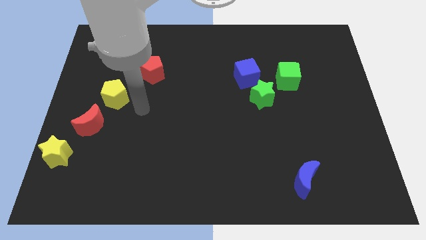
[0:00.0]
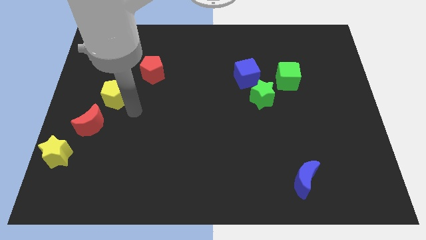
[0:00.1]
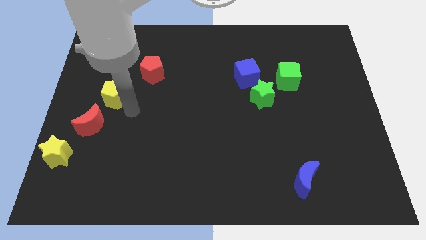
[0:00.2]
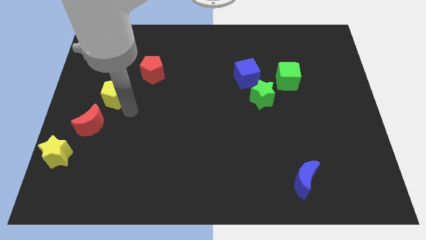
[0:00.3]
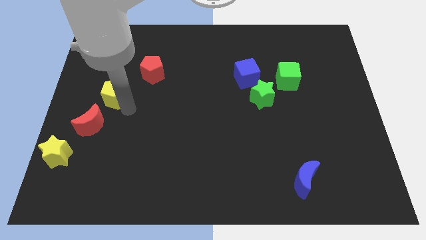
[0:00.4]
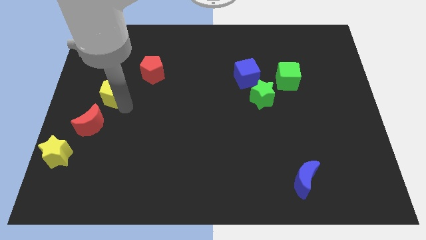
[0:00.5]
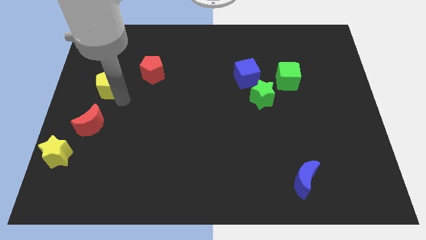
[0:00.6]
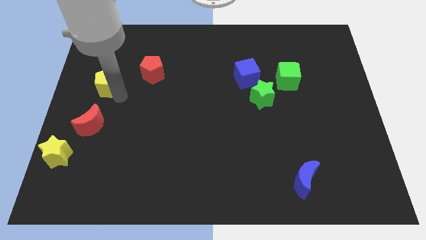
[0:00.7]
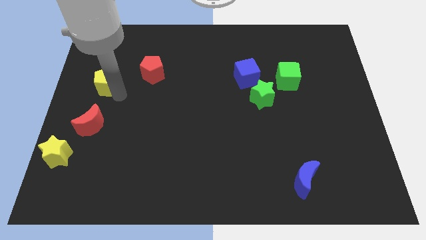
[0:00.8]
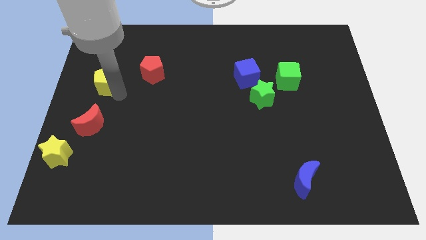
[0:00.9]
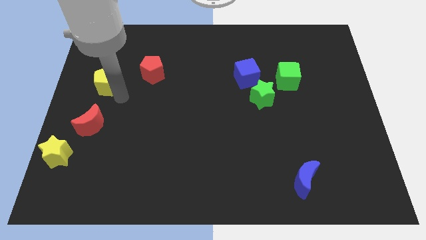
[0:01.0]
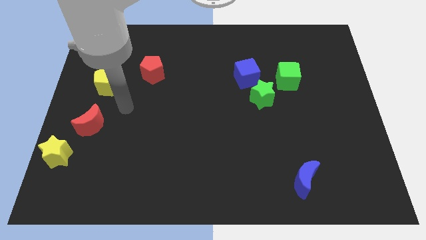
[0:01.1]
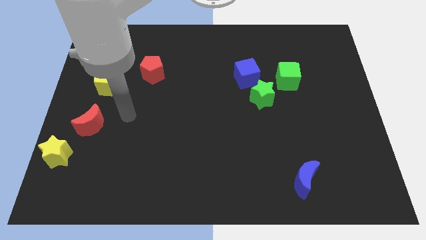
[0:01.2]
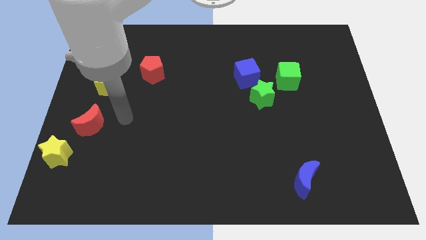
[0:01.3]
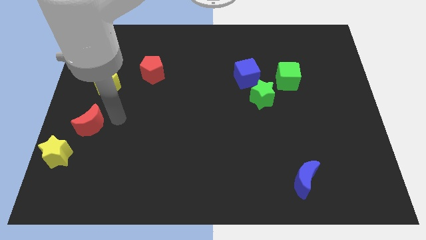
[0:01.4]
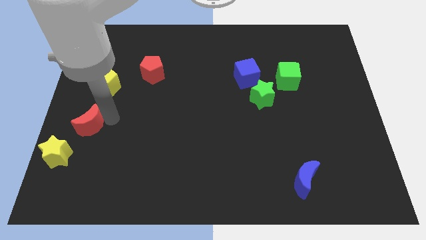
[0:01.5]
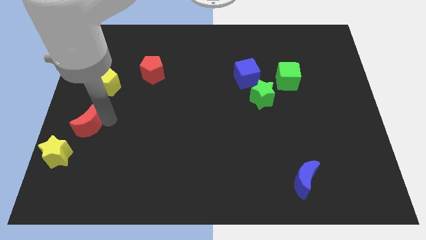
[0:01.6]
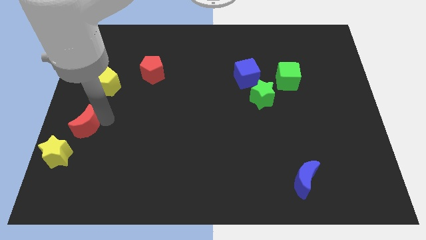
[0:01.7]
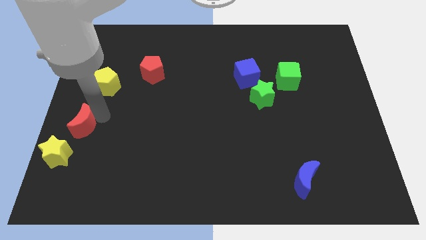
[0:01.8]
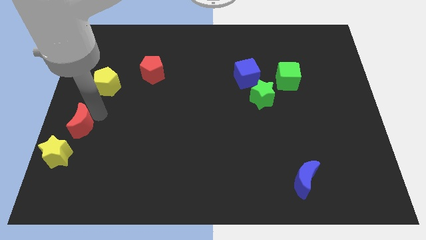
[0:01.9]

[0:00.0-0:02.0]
move the yellow pentagon and red crescent to the left side of the table

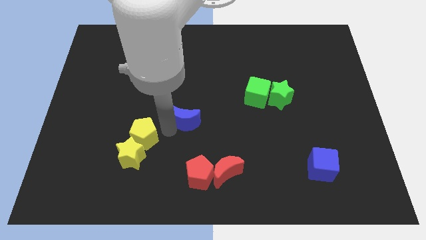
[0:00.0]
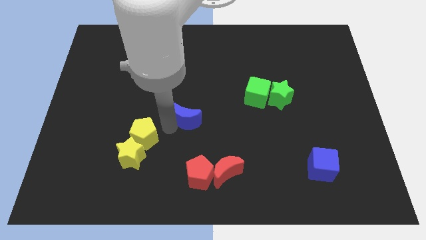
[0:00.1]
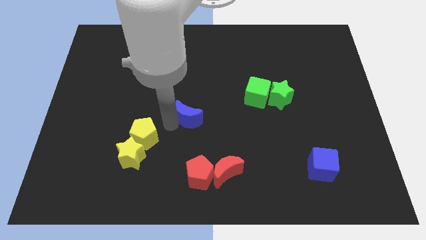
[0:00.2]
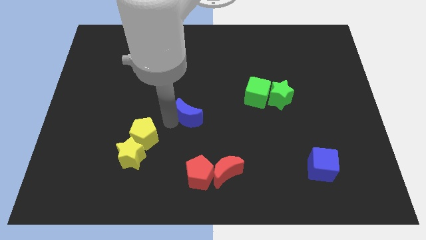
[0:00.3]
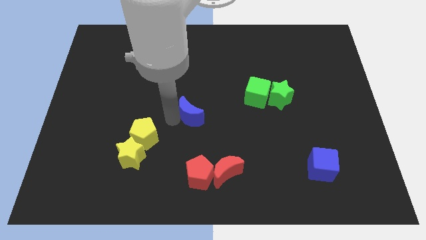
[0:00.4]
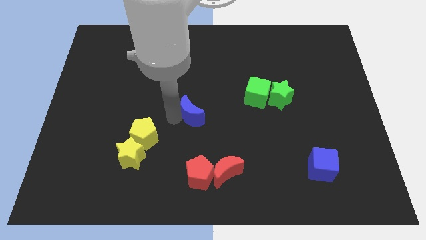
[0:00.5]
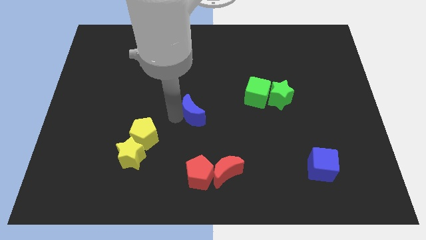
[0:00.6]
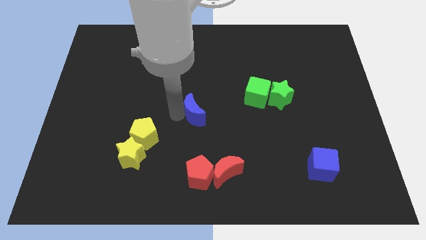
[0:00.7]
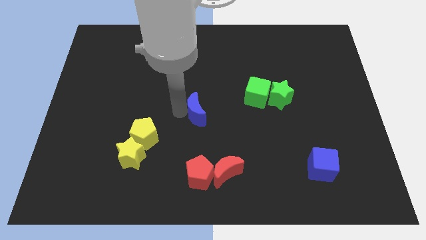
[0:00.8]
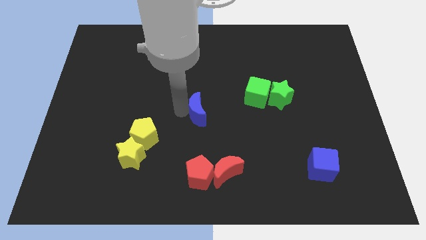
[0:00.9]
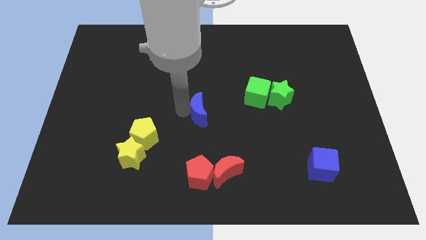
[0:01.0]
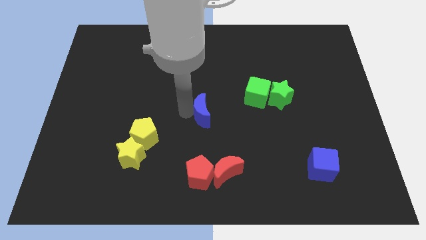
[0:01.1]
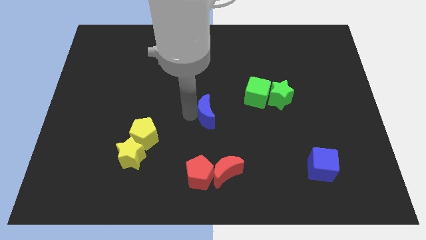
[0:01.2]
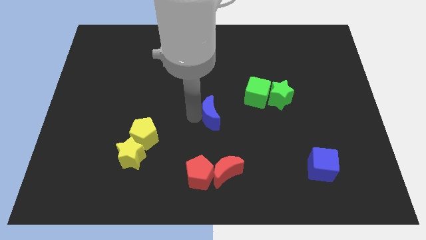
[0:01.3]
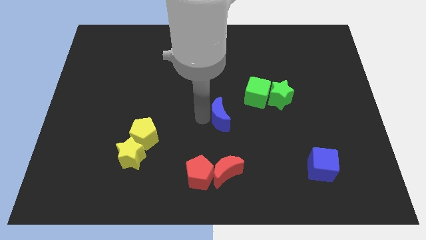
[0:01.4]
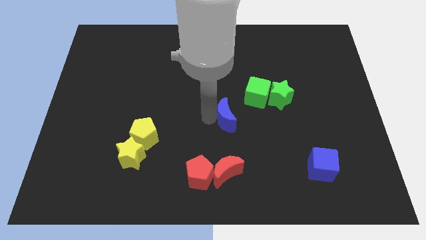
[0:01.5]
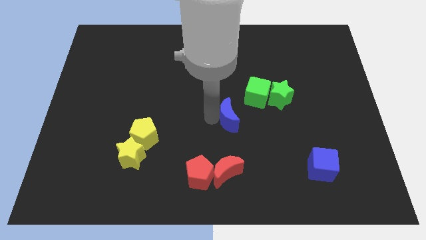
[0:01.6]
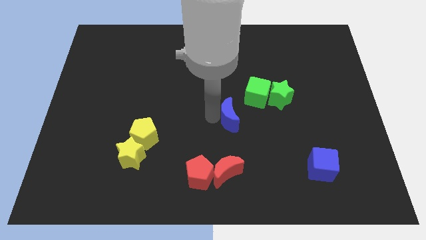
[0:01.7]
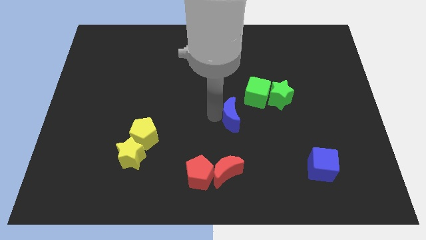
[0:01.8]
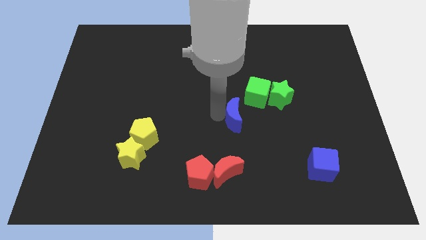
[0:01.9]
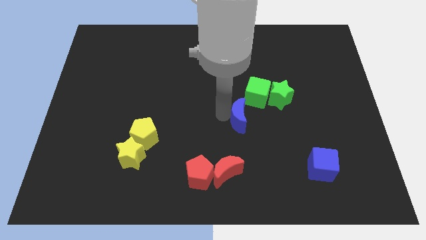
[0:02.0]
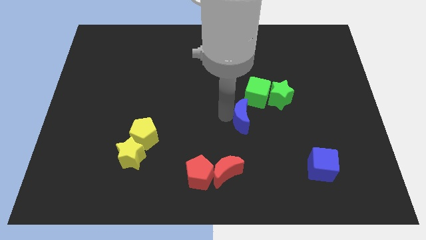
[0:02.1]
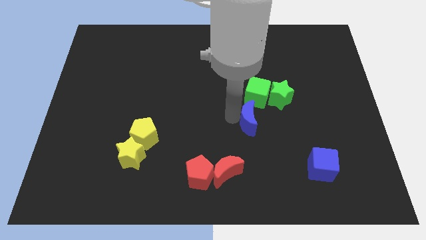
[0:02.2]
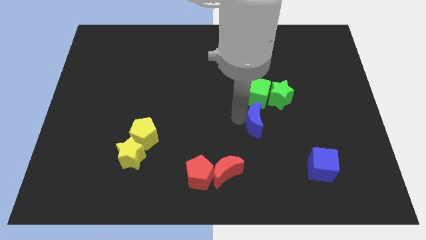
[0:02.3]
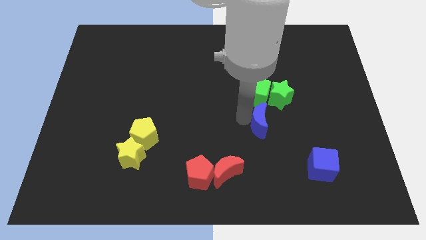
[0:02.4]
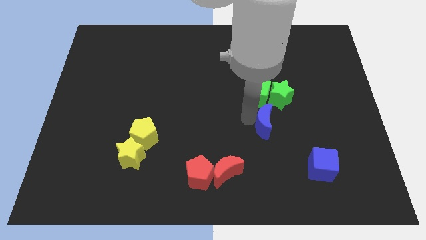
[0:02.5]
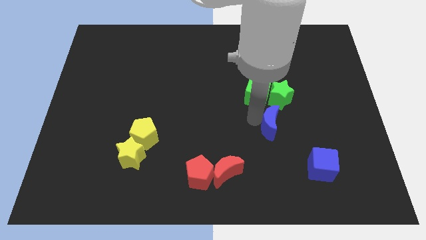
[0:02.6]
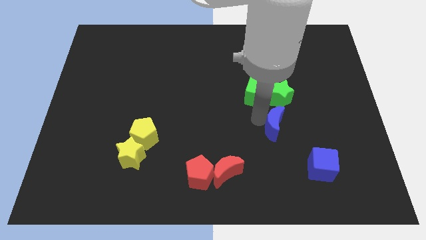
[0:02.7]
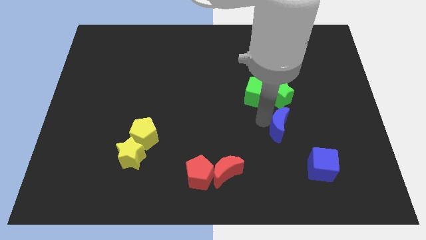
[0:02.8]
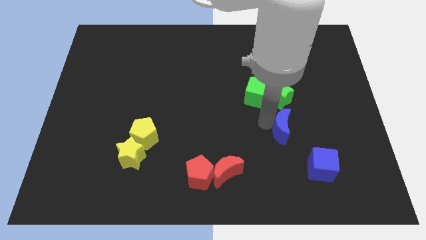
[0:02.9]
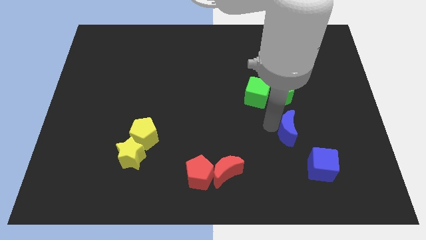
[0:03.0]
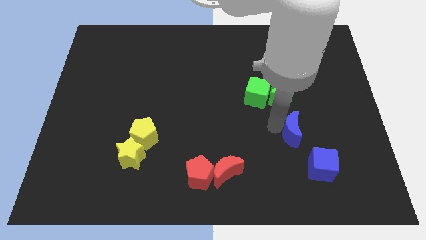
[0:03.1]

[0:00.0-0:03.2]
place the blue moon below the green star

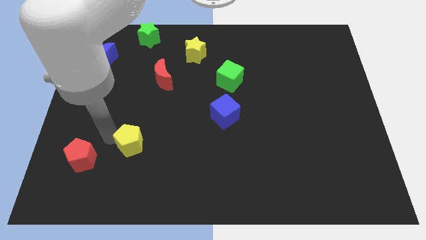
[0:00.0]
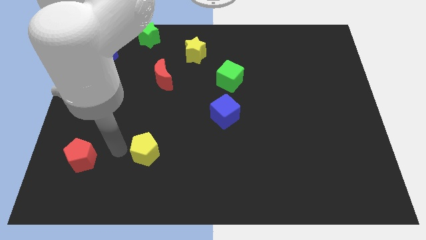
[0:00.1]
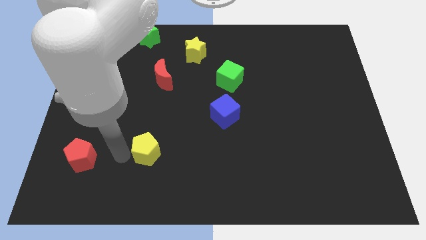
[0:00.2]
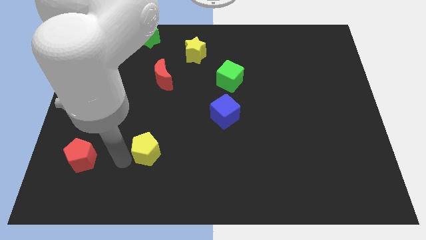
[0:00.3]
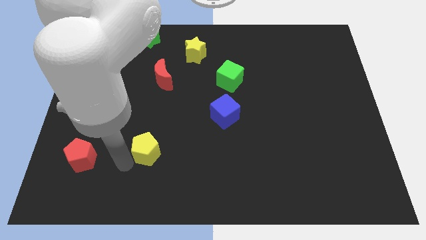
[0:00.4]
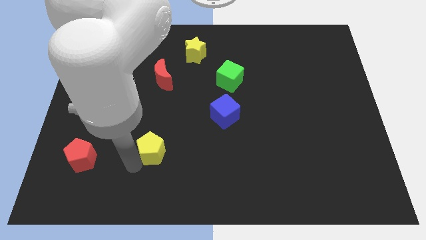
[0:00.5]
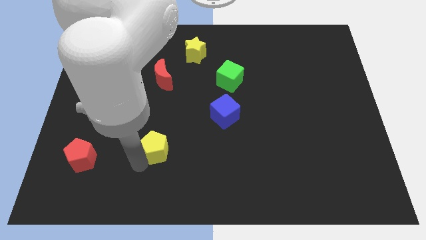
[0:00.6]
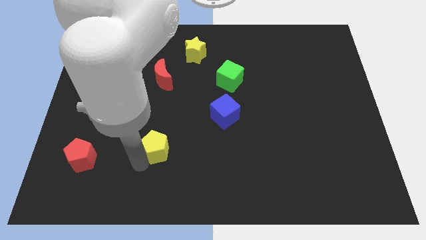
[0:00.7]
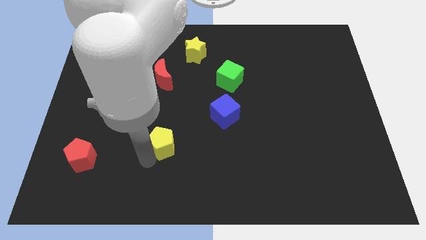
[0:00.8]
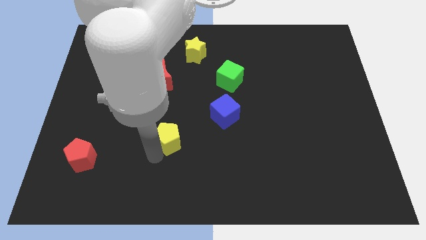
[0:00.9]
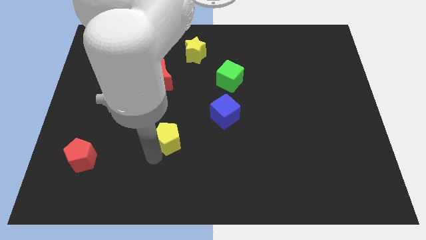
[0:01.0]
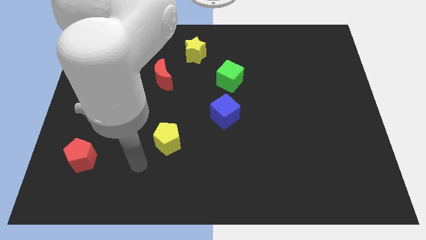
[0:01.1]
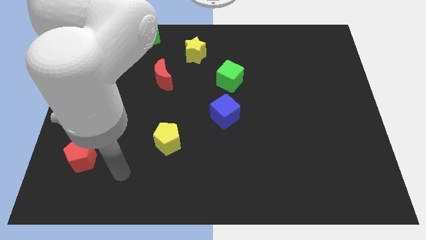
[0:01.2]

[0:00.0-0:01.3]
put the yellow pentagon vertically below the red moon

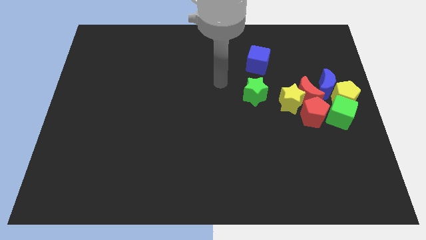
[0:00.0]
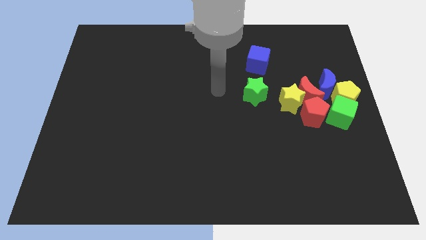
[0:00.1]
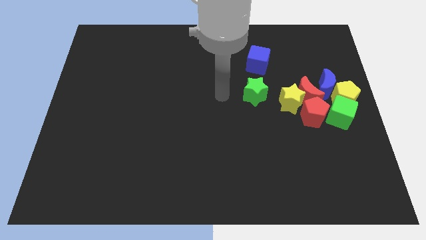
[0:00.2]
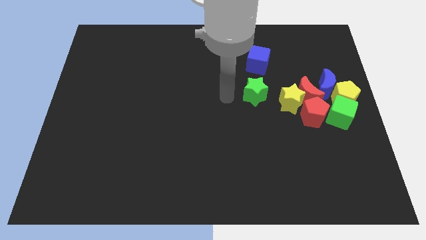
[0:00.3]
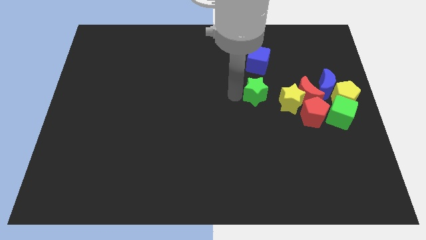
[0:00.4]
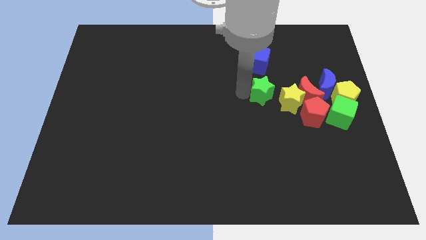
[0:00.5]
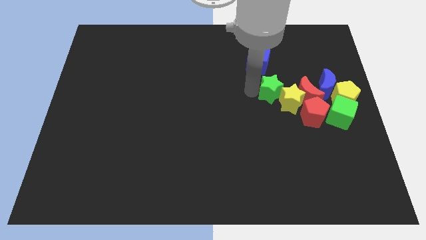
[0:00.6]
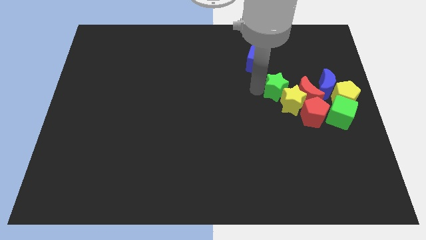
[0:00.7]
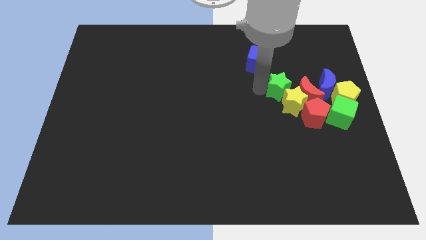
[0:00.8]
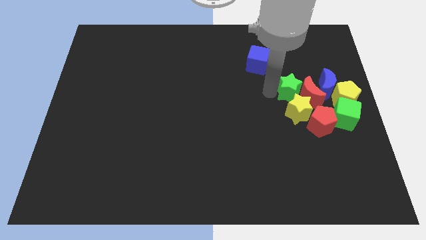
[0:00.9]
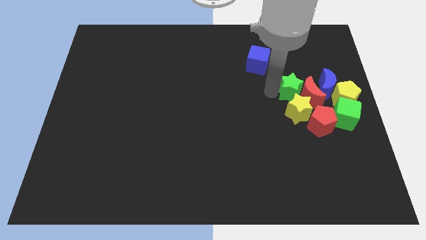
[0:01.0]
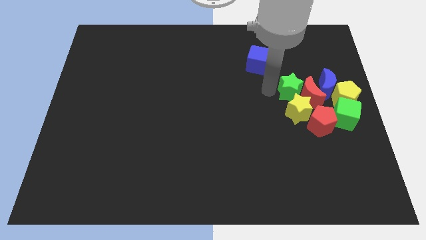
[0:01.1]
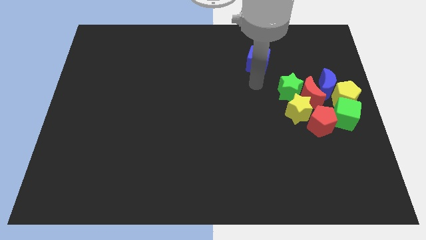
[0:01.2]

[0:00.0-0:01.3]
place the green star above the yellow star

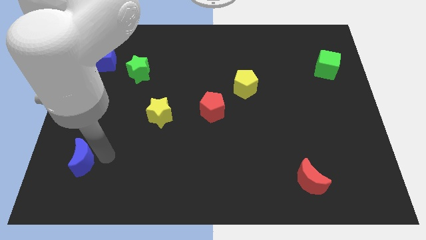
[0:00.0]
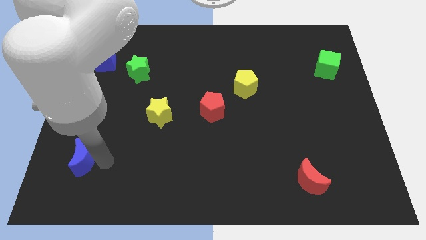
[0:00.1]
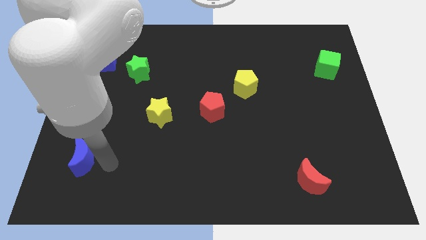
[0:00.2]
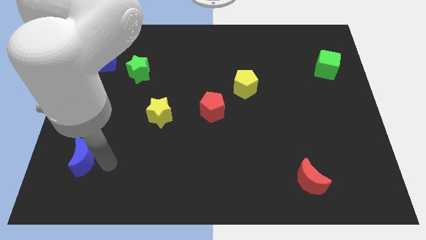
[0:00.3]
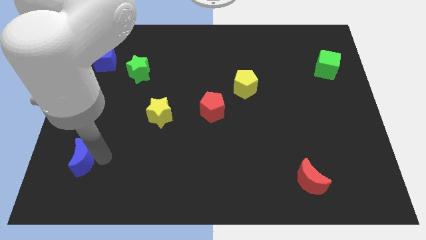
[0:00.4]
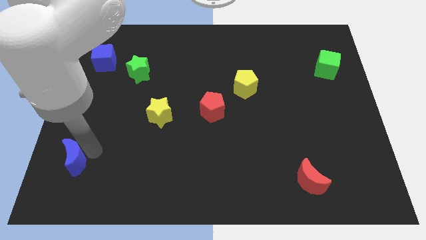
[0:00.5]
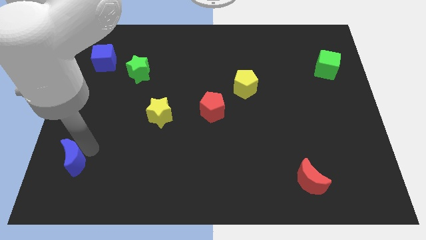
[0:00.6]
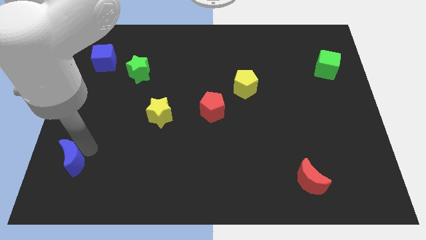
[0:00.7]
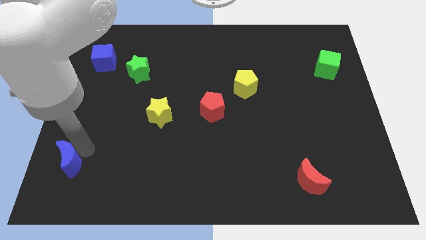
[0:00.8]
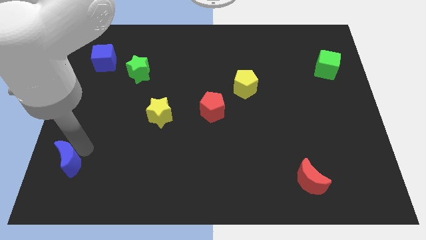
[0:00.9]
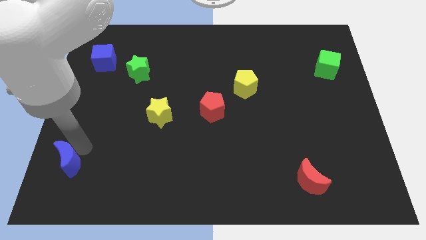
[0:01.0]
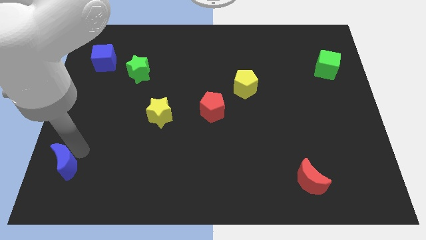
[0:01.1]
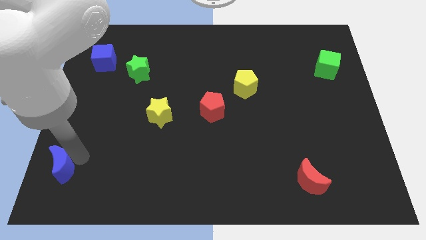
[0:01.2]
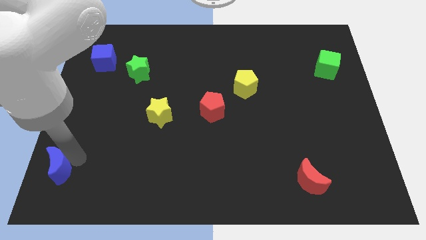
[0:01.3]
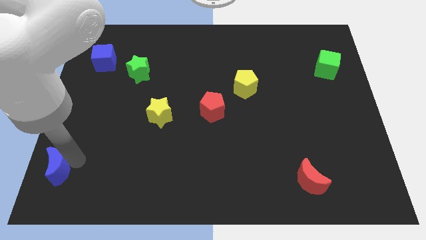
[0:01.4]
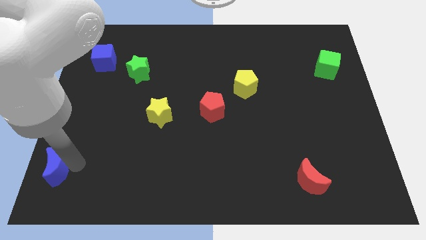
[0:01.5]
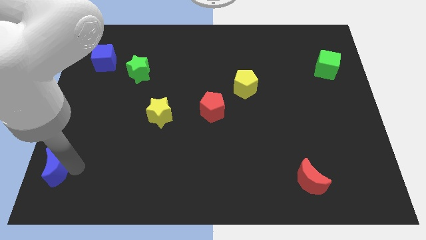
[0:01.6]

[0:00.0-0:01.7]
push blue moon to the left
